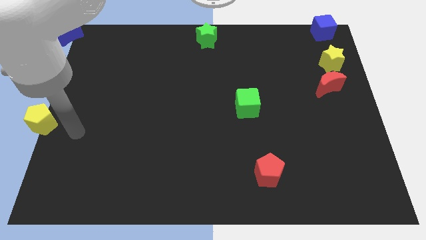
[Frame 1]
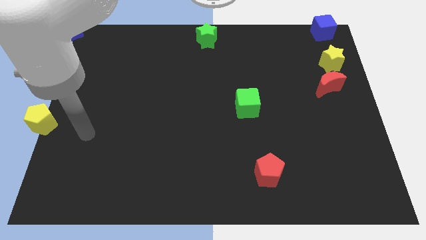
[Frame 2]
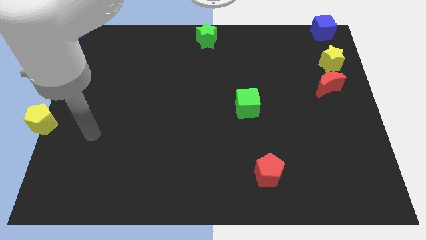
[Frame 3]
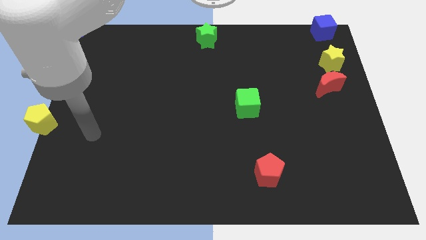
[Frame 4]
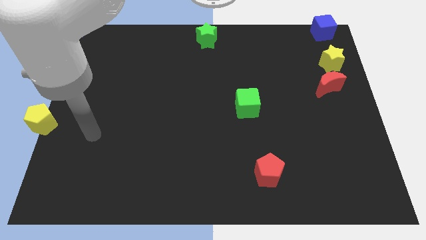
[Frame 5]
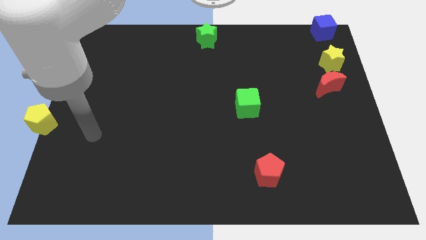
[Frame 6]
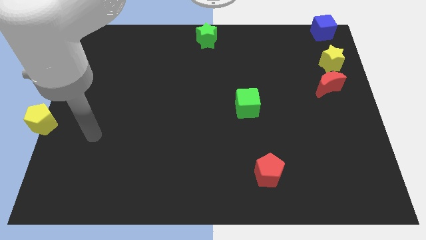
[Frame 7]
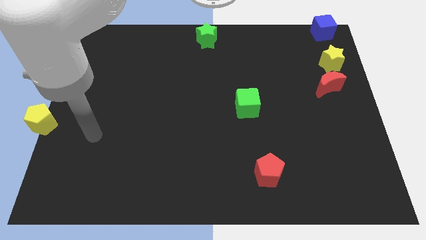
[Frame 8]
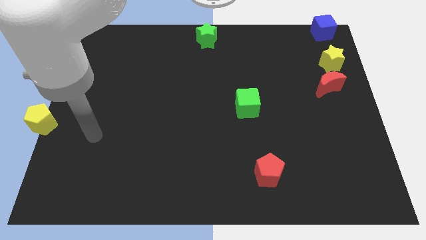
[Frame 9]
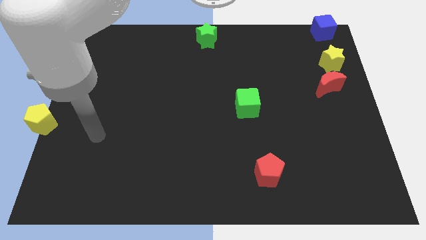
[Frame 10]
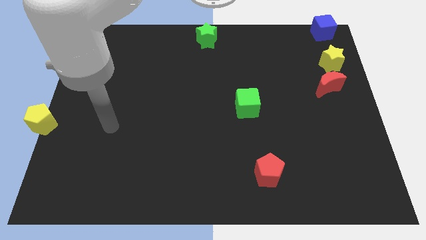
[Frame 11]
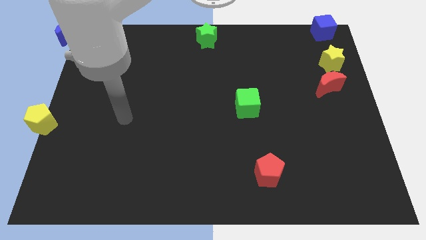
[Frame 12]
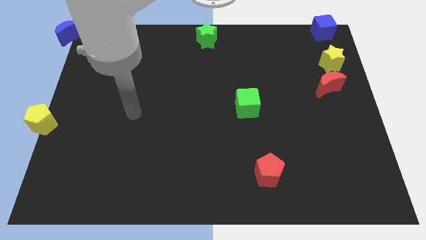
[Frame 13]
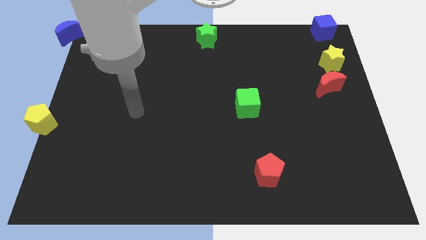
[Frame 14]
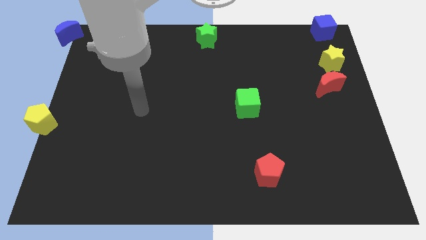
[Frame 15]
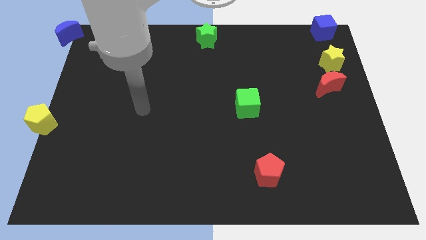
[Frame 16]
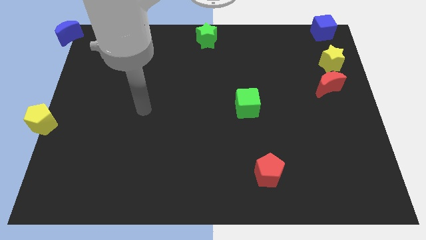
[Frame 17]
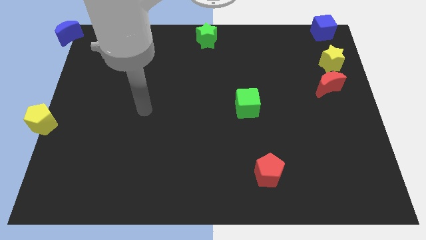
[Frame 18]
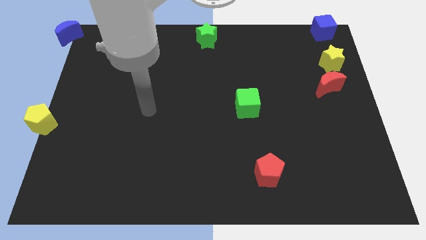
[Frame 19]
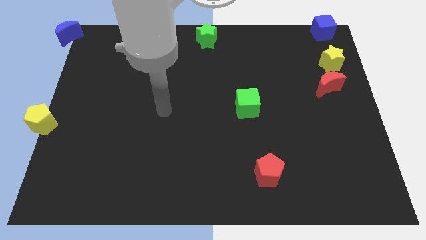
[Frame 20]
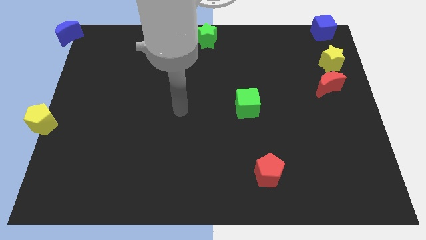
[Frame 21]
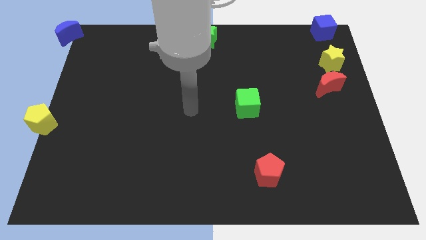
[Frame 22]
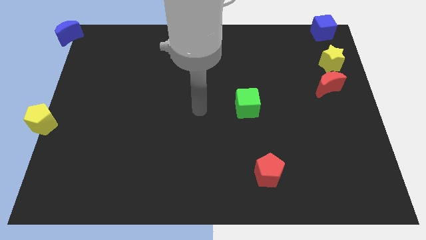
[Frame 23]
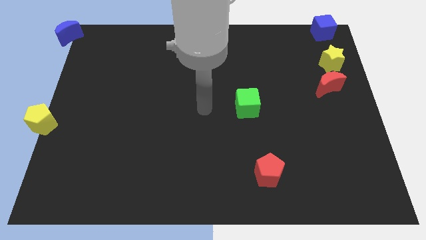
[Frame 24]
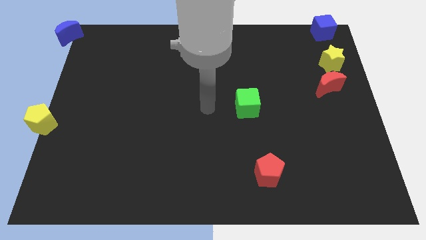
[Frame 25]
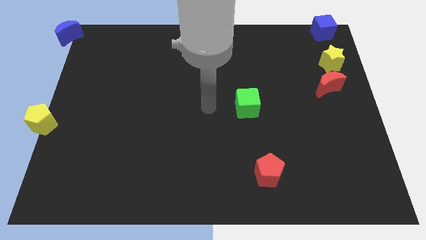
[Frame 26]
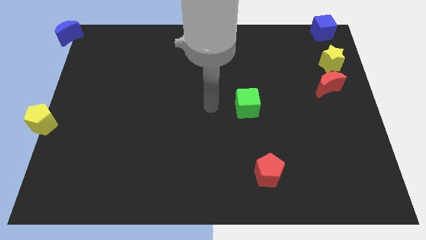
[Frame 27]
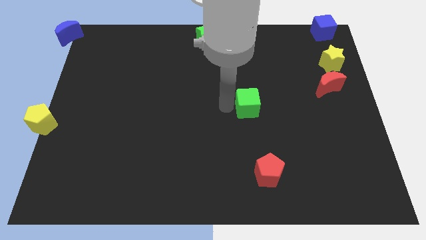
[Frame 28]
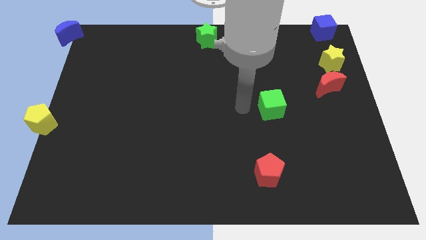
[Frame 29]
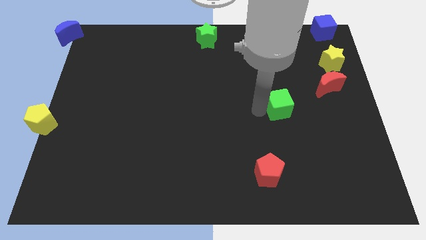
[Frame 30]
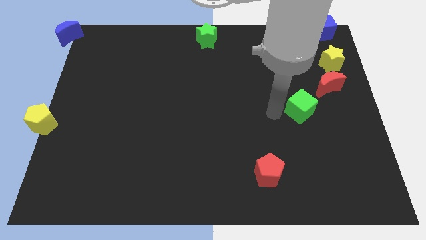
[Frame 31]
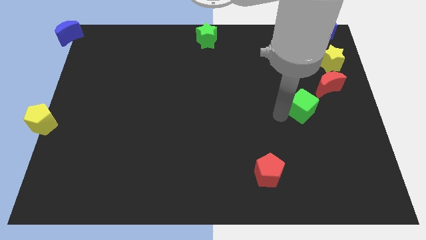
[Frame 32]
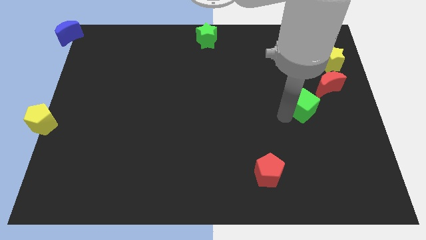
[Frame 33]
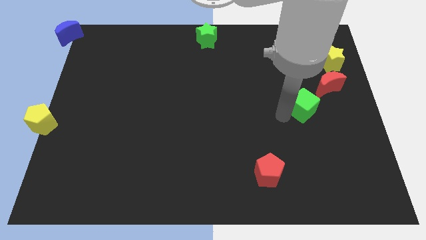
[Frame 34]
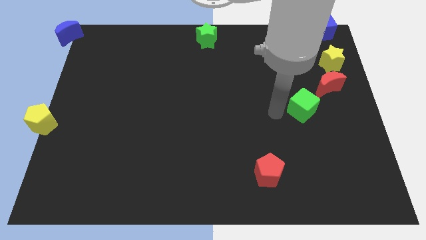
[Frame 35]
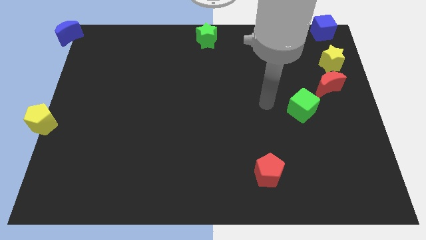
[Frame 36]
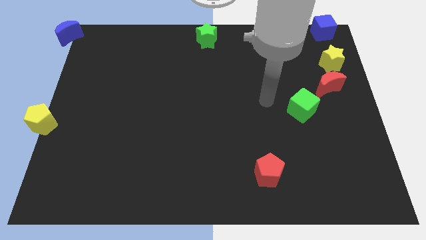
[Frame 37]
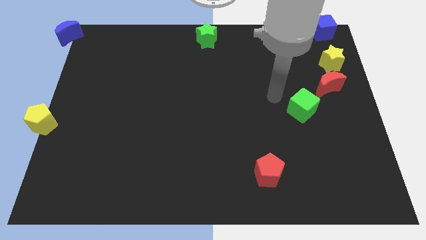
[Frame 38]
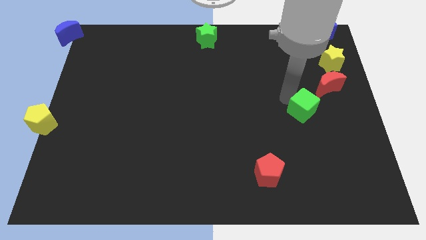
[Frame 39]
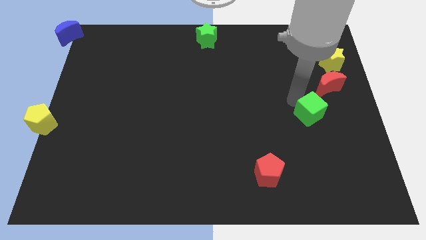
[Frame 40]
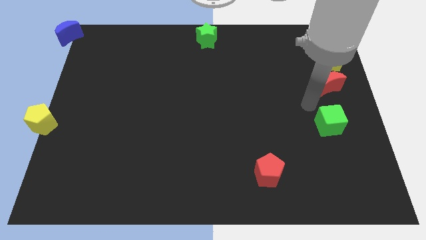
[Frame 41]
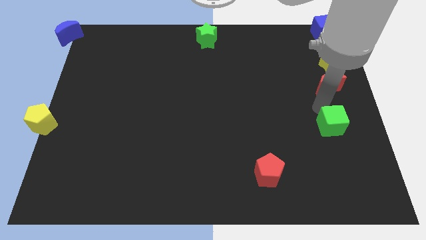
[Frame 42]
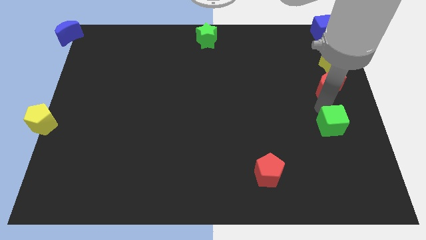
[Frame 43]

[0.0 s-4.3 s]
move the green cube to the bottom of the red crescent

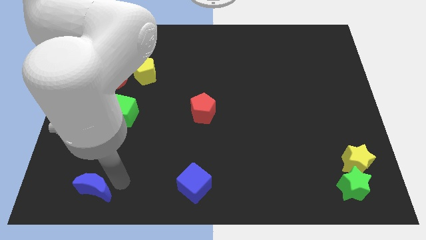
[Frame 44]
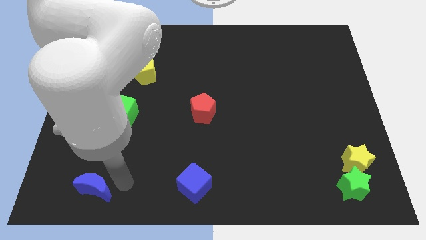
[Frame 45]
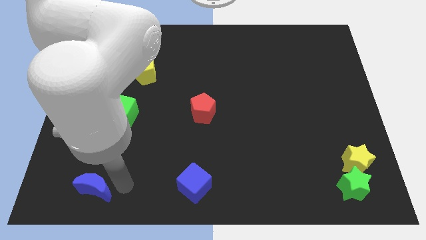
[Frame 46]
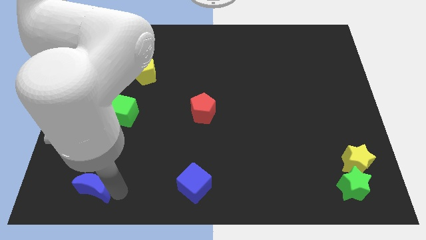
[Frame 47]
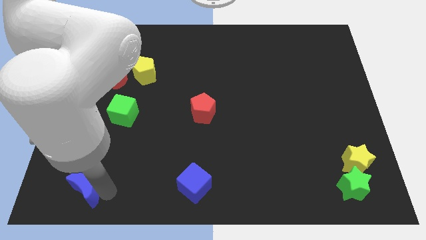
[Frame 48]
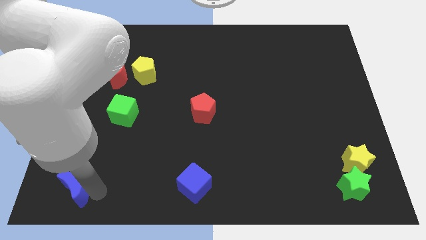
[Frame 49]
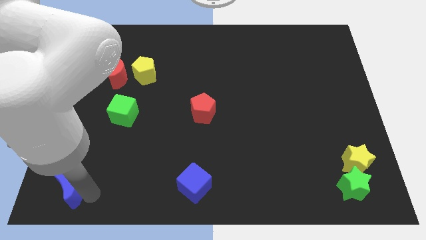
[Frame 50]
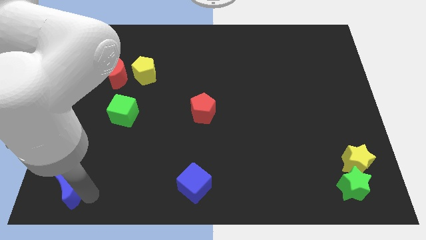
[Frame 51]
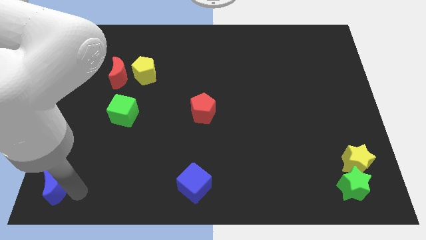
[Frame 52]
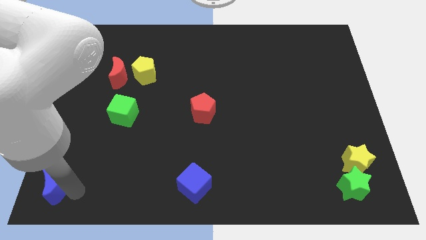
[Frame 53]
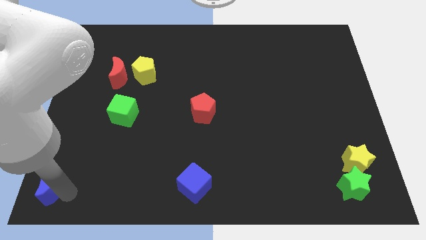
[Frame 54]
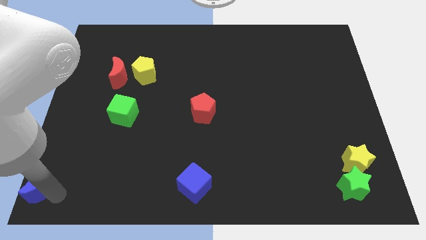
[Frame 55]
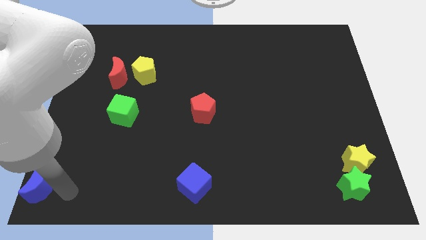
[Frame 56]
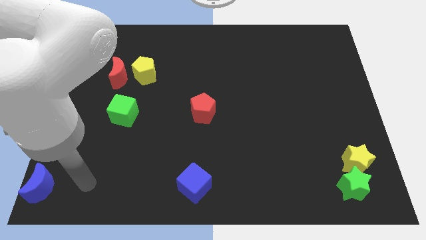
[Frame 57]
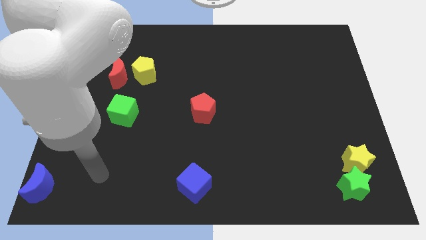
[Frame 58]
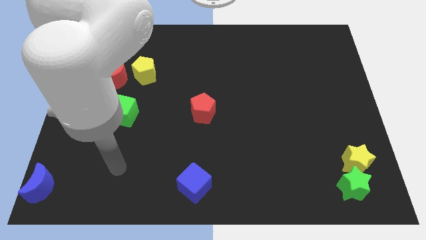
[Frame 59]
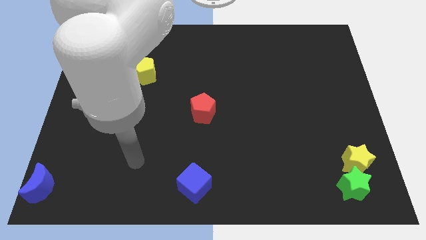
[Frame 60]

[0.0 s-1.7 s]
move the blue crescent to the bottom left of the board

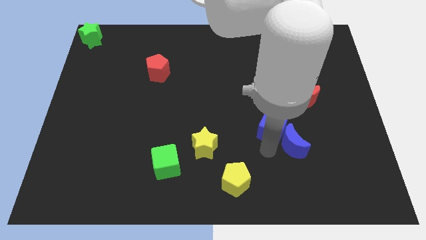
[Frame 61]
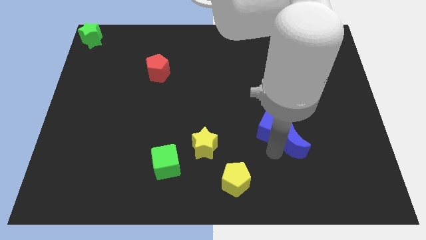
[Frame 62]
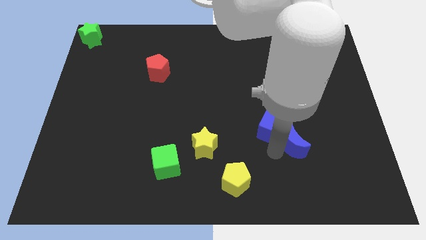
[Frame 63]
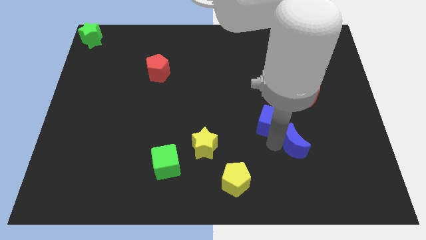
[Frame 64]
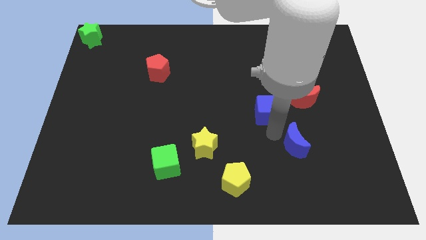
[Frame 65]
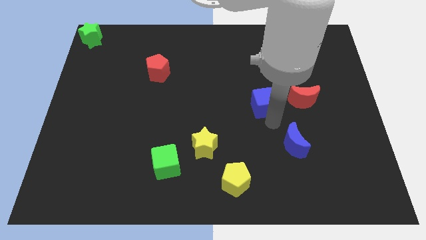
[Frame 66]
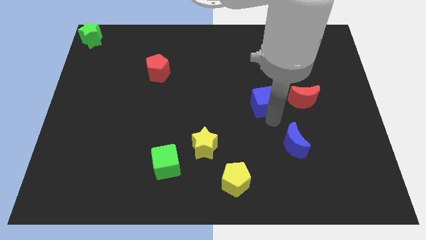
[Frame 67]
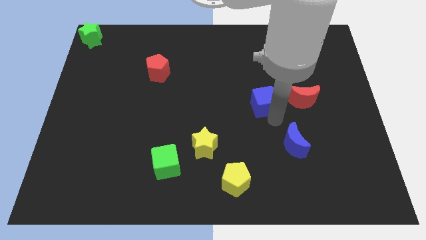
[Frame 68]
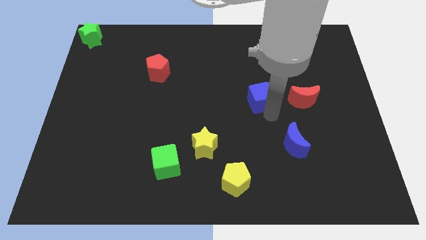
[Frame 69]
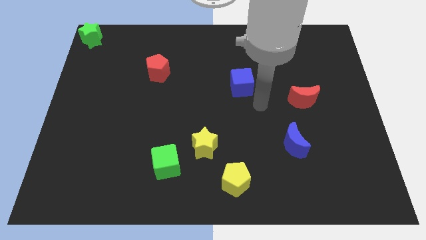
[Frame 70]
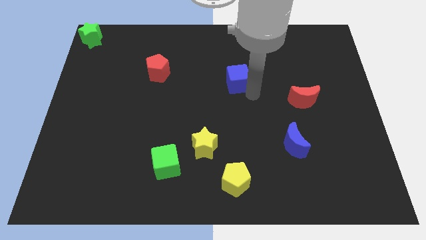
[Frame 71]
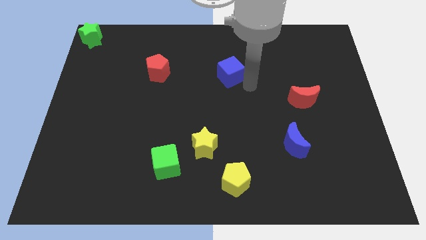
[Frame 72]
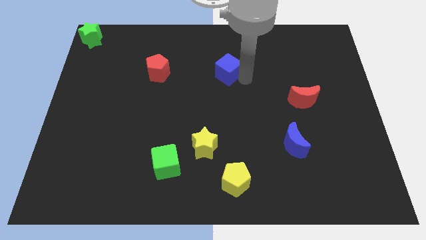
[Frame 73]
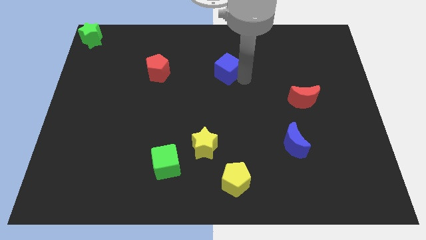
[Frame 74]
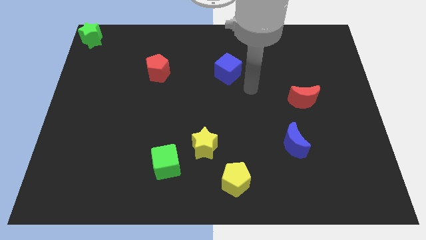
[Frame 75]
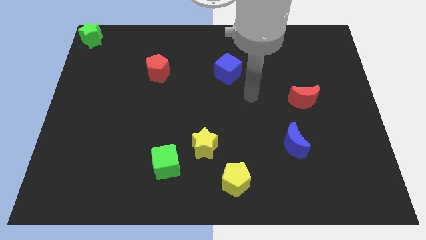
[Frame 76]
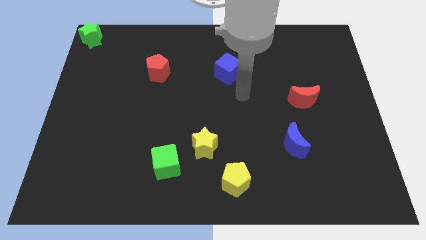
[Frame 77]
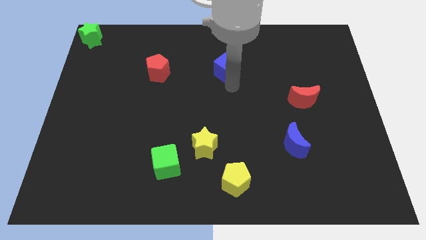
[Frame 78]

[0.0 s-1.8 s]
push the blue moon towards top

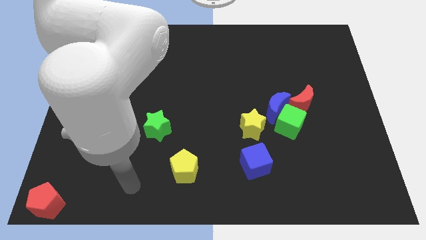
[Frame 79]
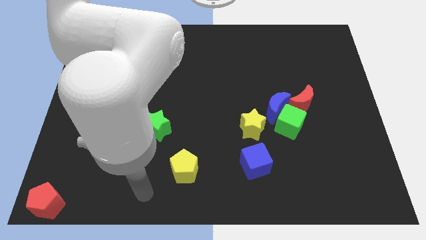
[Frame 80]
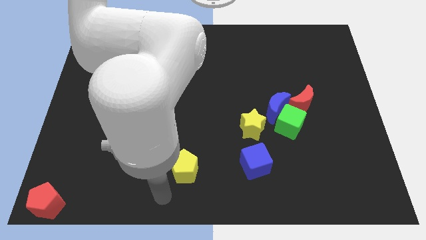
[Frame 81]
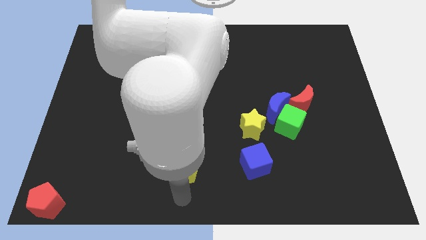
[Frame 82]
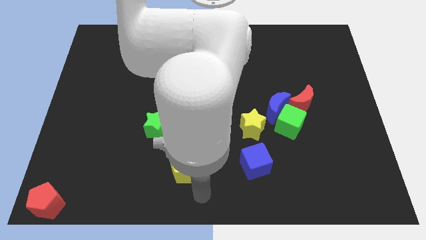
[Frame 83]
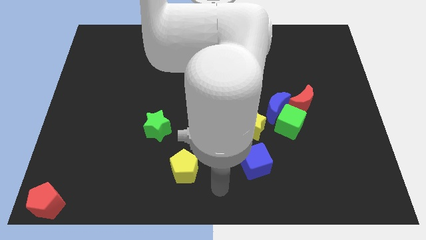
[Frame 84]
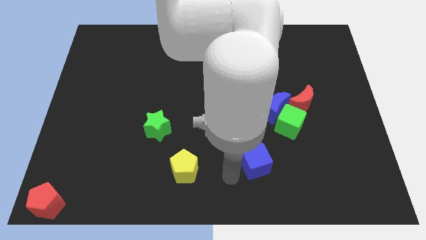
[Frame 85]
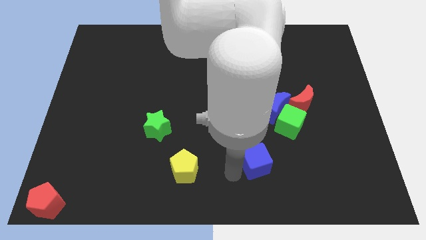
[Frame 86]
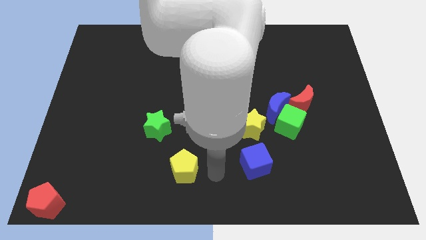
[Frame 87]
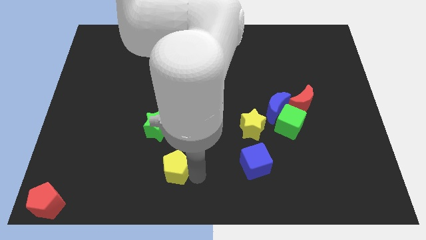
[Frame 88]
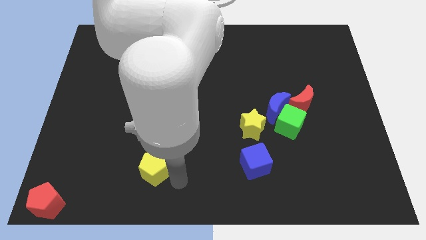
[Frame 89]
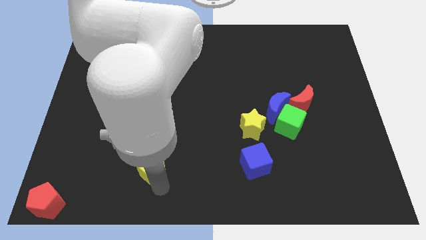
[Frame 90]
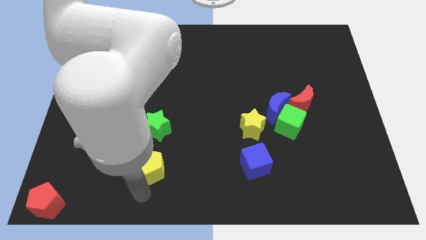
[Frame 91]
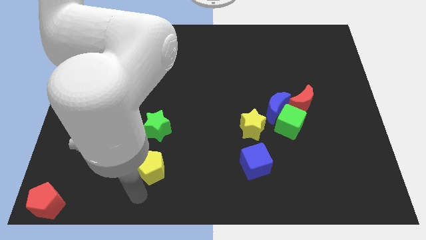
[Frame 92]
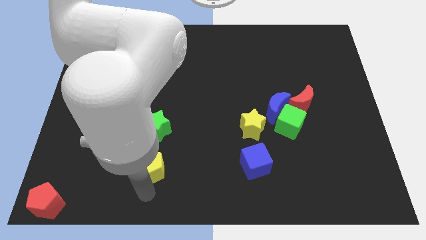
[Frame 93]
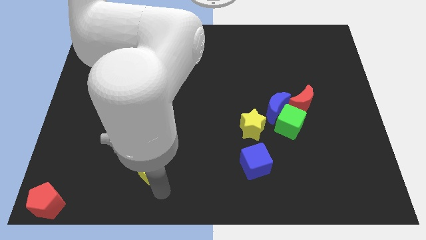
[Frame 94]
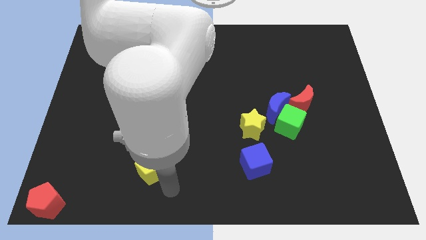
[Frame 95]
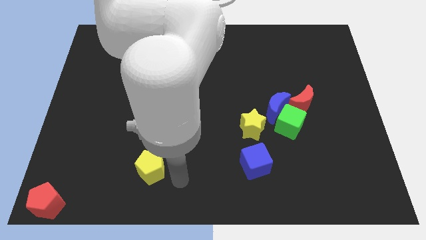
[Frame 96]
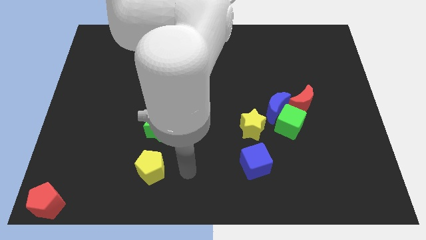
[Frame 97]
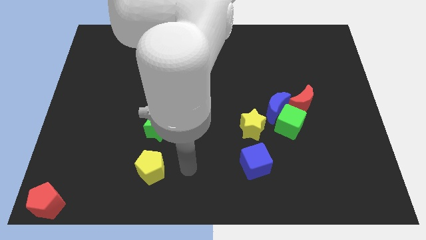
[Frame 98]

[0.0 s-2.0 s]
slightly push the yellow pentagan
